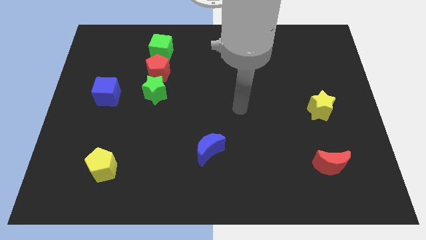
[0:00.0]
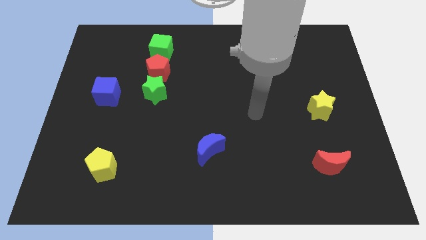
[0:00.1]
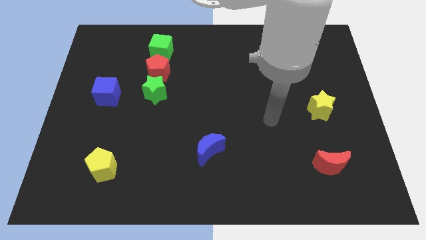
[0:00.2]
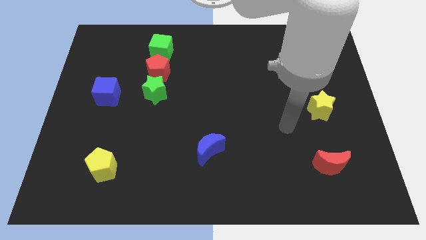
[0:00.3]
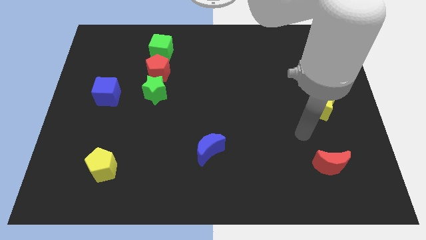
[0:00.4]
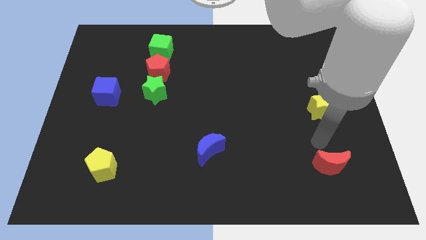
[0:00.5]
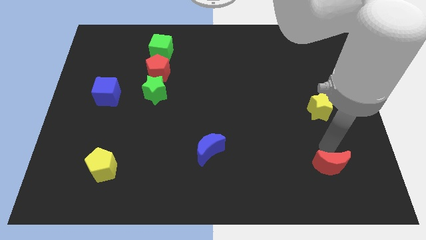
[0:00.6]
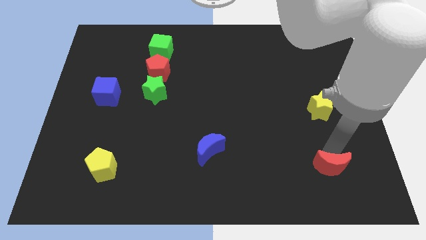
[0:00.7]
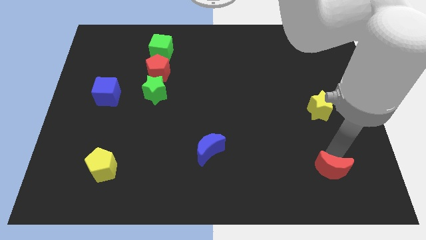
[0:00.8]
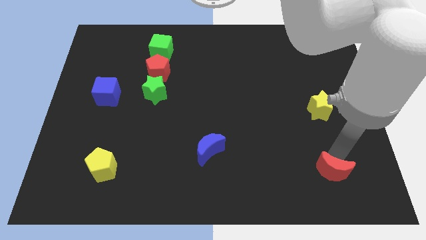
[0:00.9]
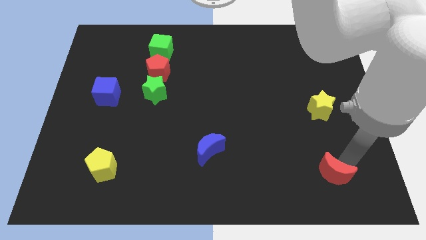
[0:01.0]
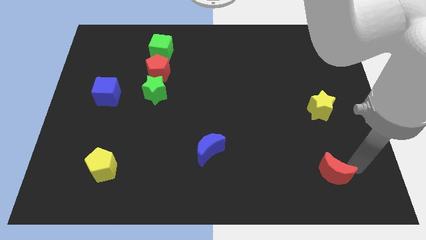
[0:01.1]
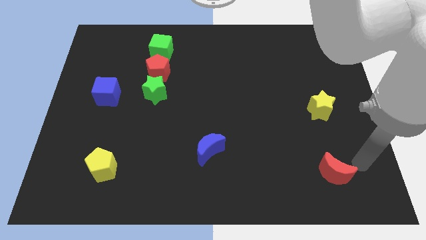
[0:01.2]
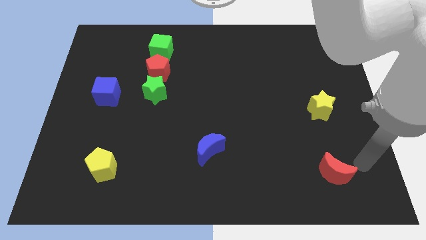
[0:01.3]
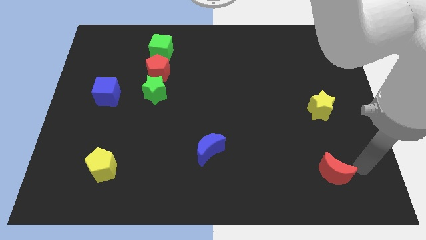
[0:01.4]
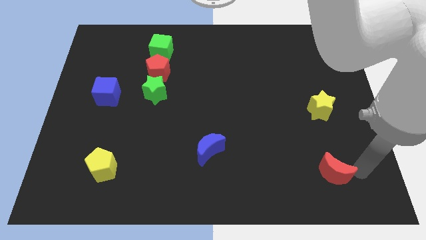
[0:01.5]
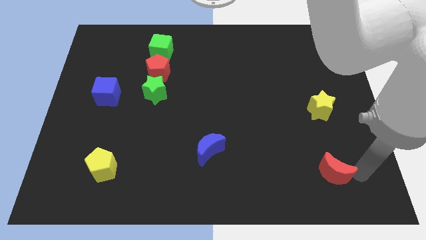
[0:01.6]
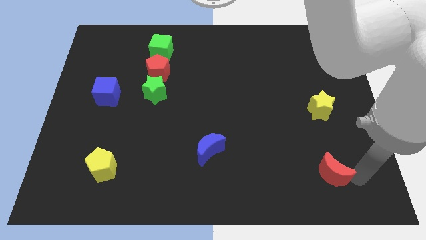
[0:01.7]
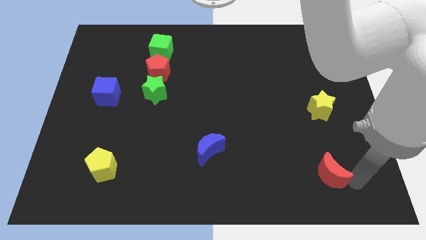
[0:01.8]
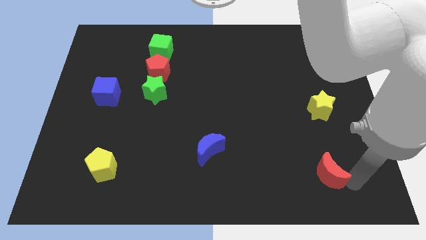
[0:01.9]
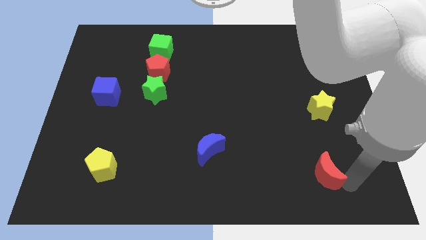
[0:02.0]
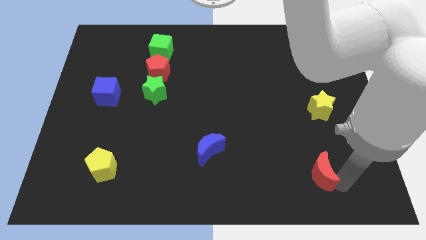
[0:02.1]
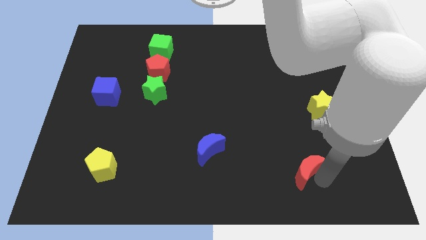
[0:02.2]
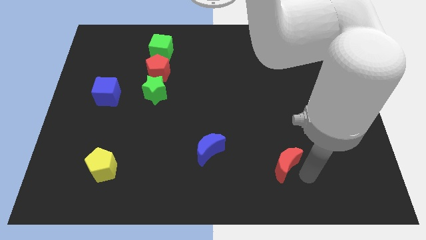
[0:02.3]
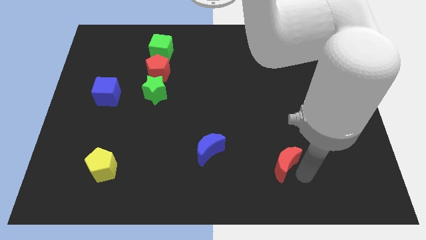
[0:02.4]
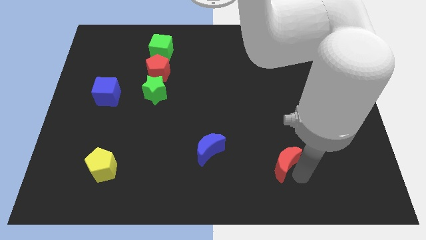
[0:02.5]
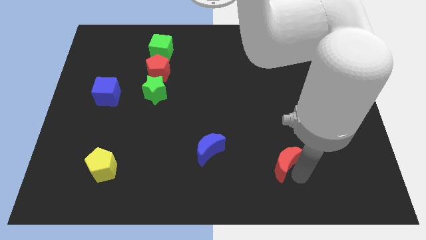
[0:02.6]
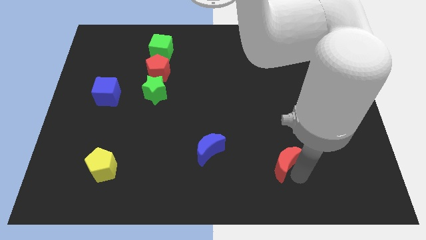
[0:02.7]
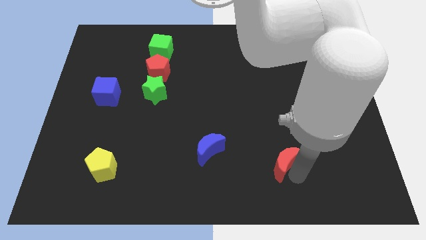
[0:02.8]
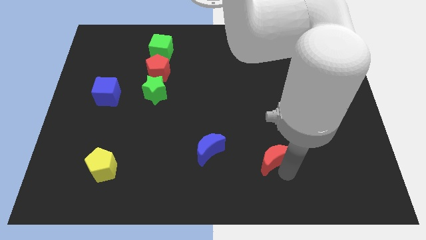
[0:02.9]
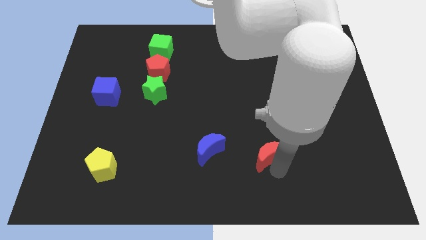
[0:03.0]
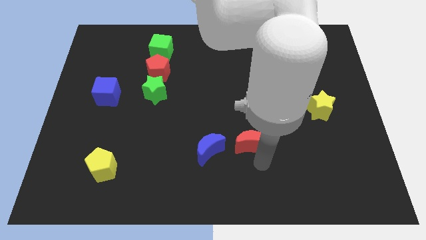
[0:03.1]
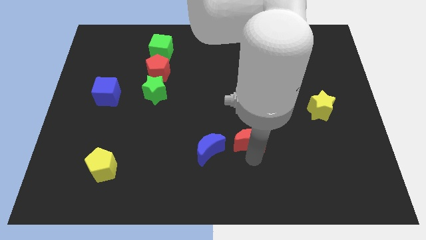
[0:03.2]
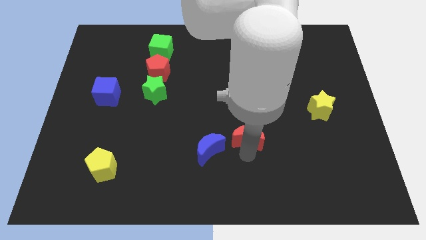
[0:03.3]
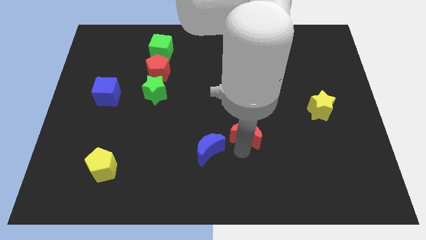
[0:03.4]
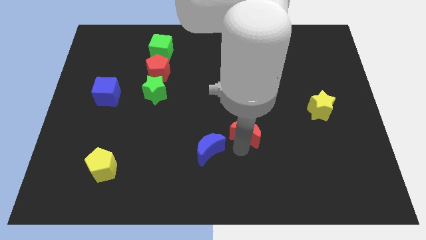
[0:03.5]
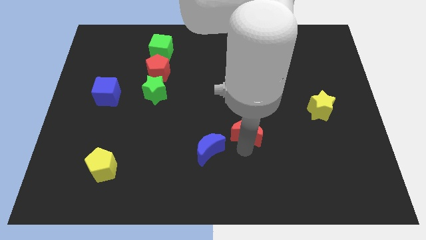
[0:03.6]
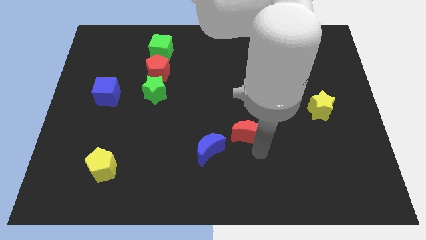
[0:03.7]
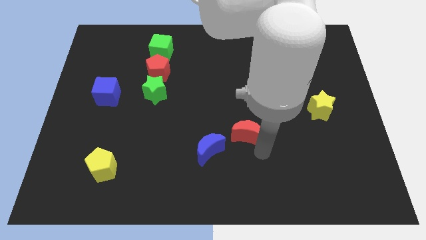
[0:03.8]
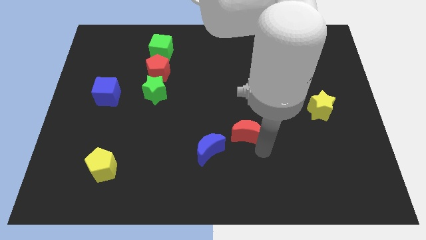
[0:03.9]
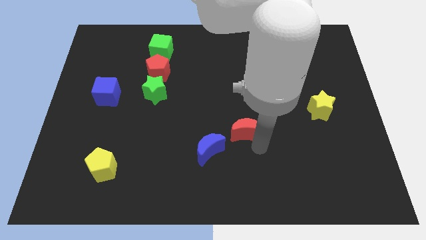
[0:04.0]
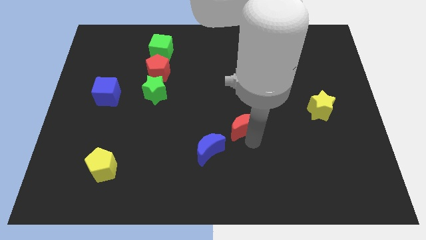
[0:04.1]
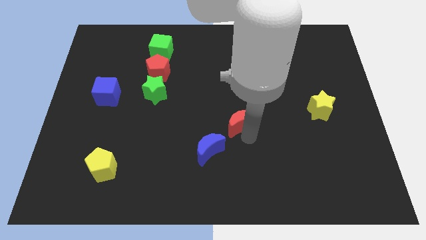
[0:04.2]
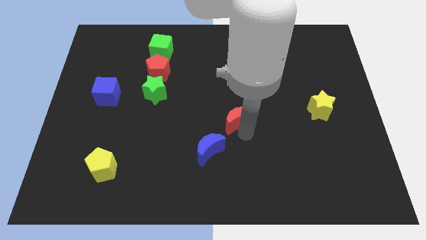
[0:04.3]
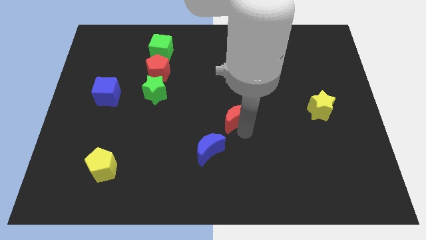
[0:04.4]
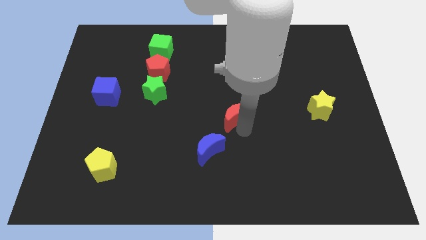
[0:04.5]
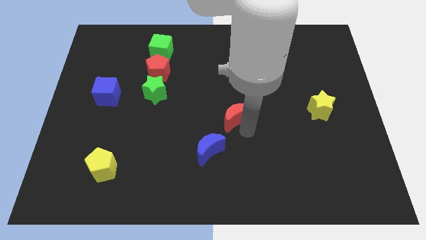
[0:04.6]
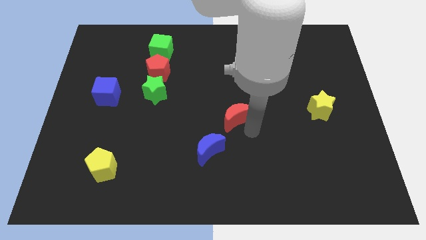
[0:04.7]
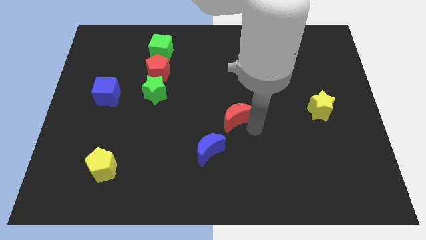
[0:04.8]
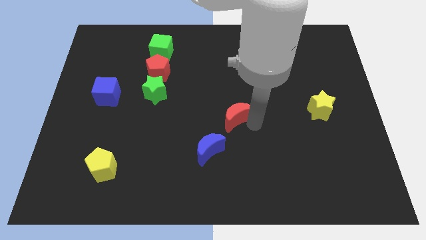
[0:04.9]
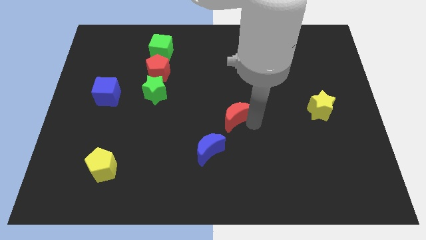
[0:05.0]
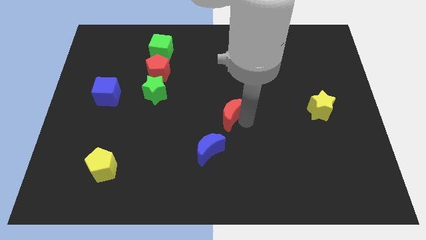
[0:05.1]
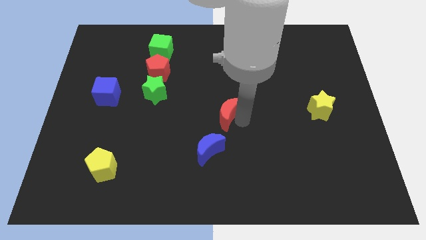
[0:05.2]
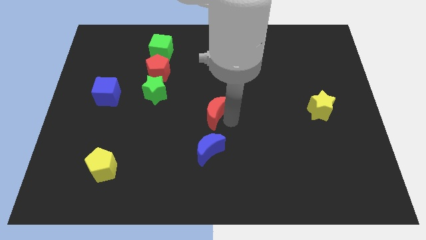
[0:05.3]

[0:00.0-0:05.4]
move red moon above the blue moon

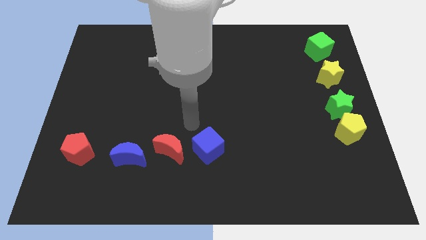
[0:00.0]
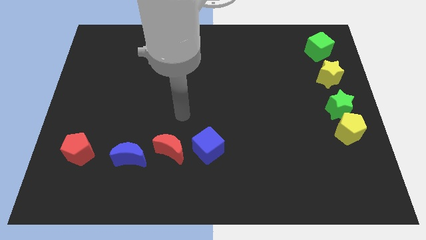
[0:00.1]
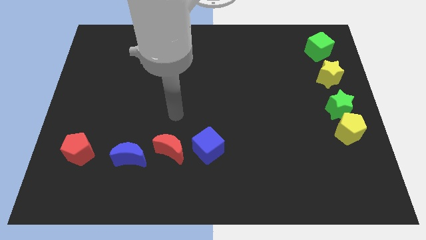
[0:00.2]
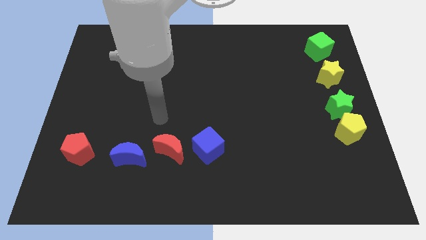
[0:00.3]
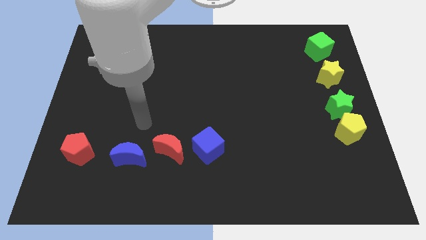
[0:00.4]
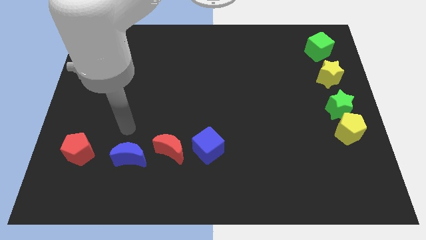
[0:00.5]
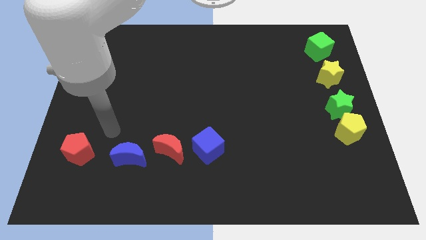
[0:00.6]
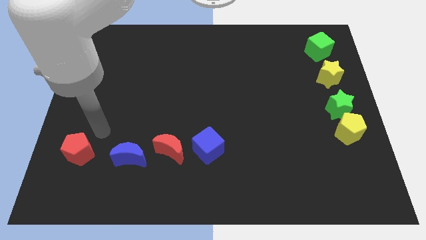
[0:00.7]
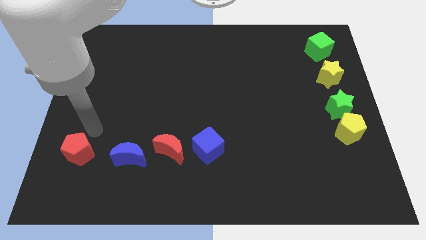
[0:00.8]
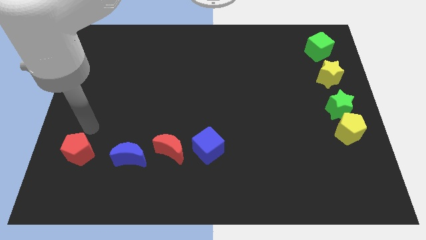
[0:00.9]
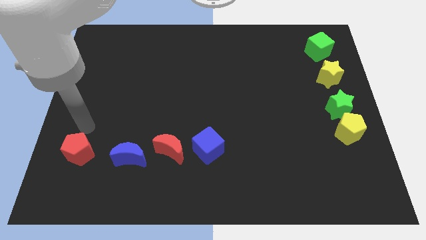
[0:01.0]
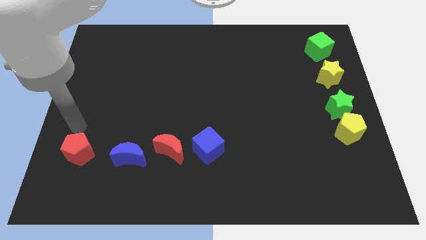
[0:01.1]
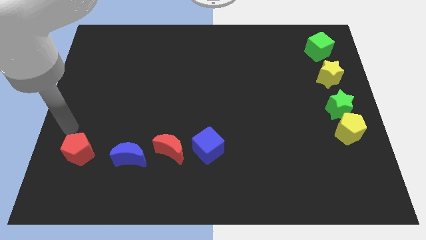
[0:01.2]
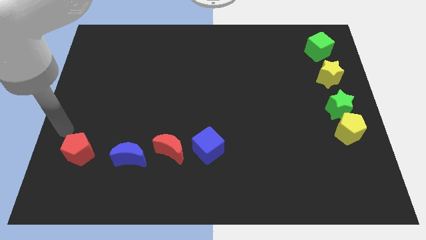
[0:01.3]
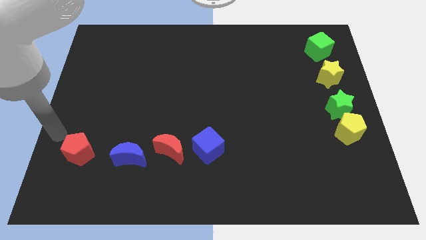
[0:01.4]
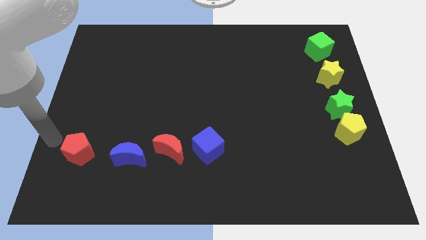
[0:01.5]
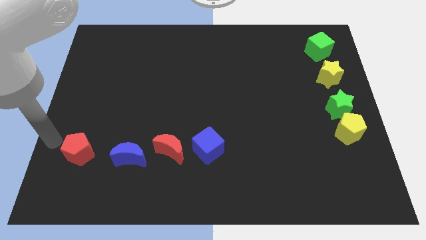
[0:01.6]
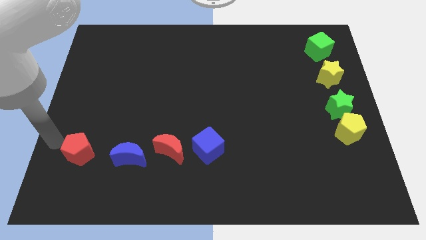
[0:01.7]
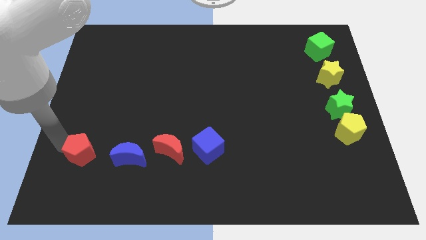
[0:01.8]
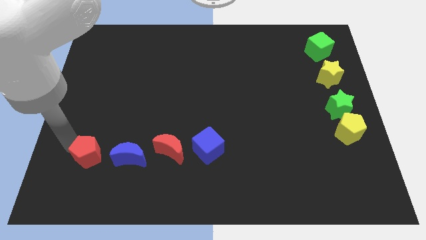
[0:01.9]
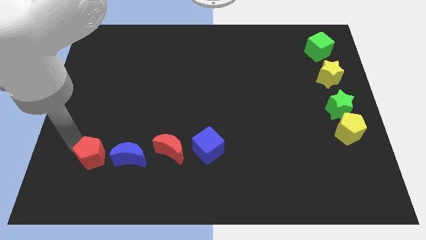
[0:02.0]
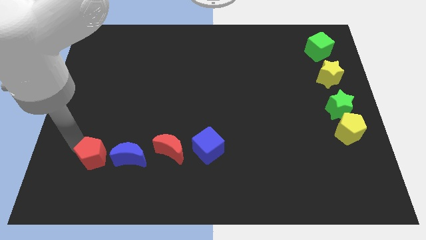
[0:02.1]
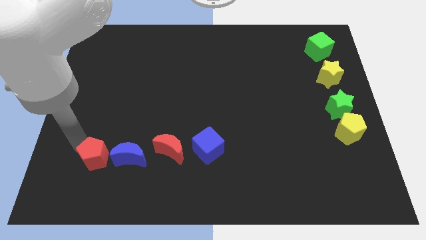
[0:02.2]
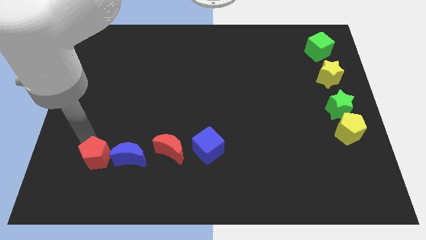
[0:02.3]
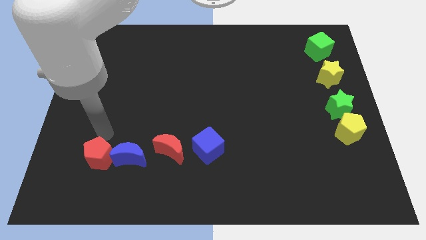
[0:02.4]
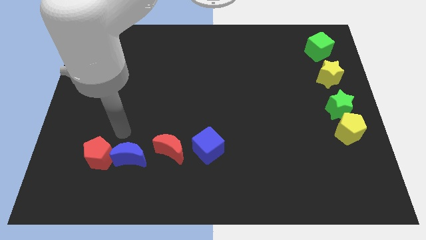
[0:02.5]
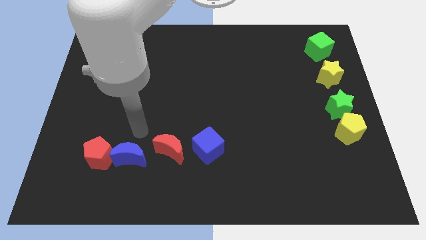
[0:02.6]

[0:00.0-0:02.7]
push red pentagon into blue moon

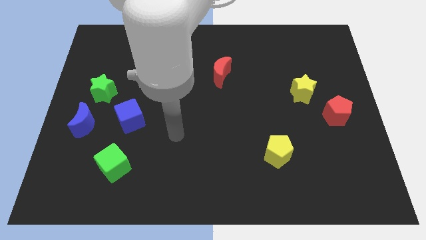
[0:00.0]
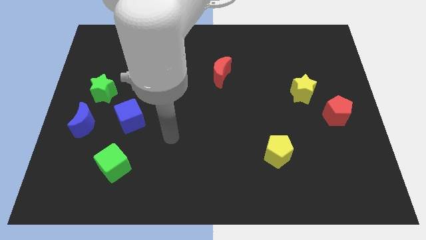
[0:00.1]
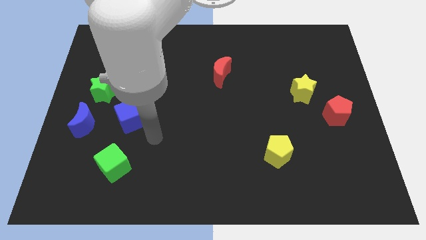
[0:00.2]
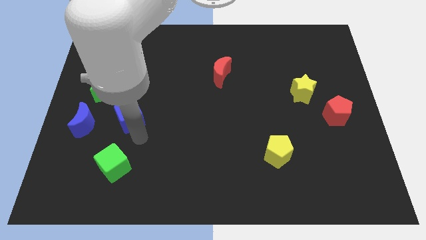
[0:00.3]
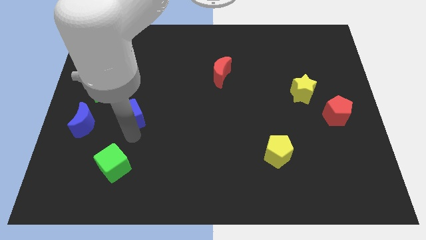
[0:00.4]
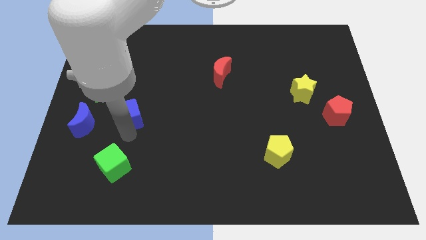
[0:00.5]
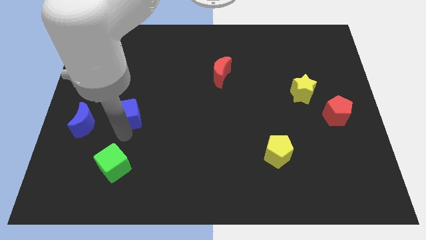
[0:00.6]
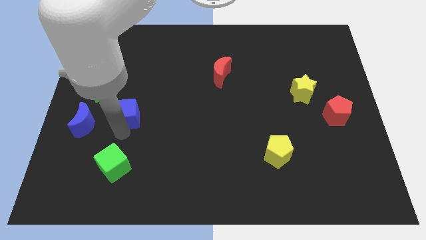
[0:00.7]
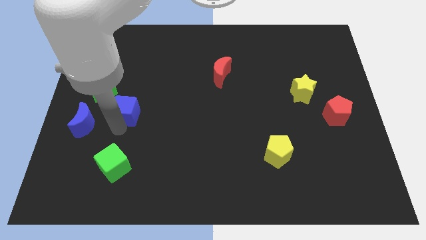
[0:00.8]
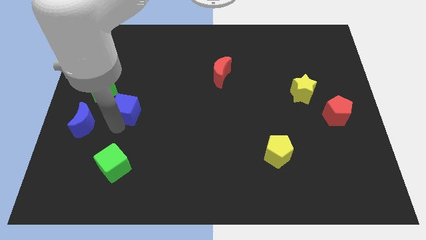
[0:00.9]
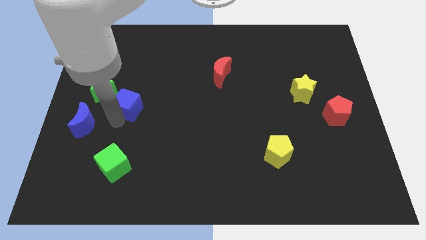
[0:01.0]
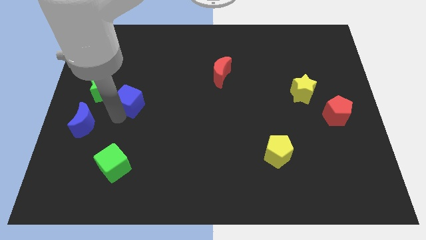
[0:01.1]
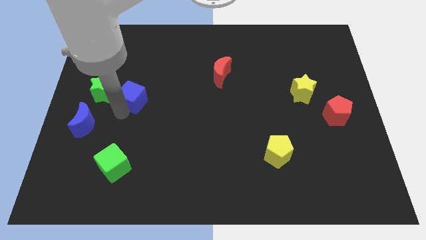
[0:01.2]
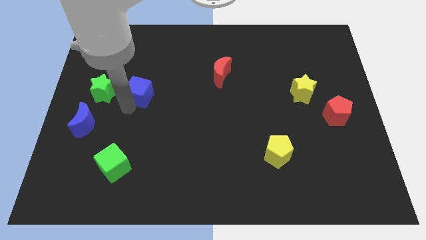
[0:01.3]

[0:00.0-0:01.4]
place blue cube to the right of green star
